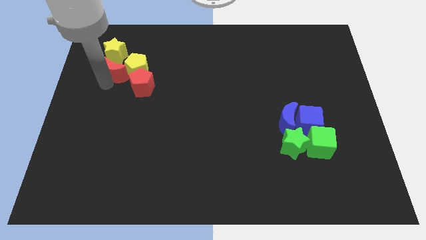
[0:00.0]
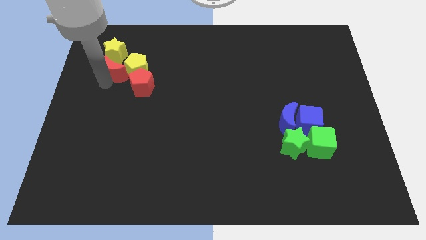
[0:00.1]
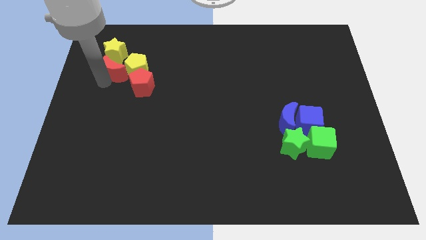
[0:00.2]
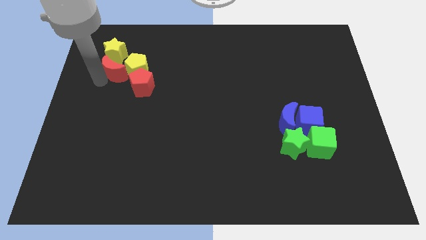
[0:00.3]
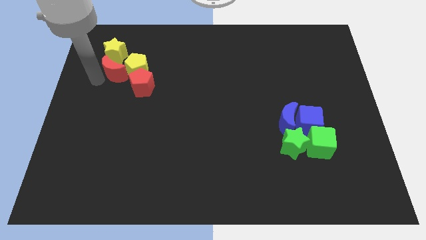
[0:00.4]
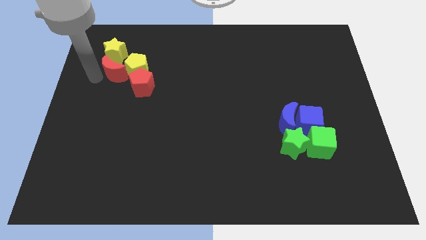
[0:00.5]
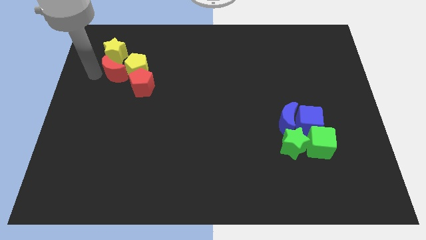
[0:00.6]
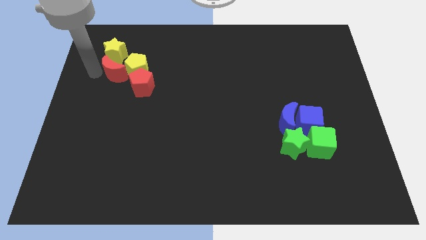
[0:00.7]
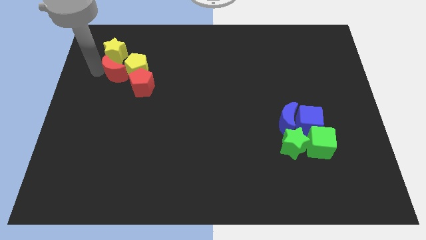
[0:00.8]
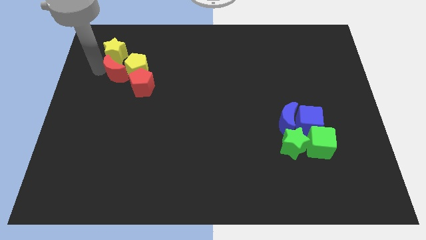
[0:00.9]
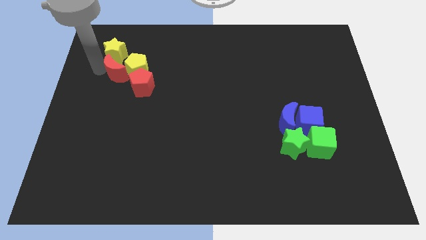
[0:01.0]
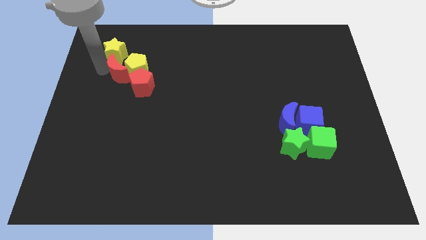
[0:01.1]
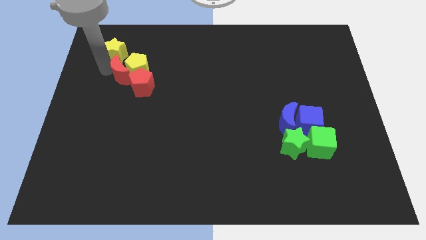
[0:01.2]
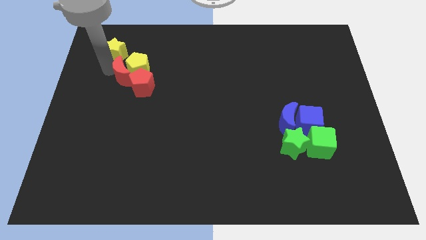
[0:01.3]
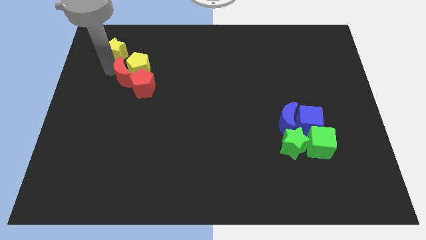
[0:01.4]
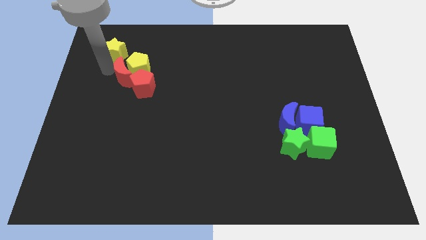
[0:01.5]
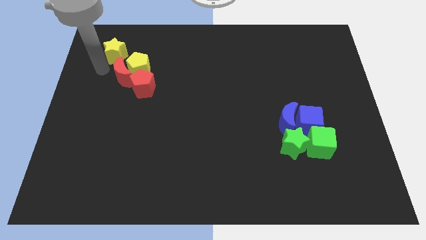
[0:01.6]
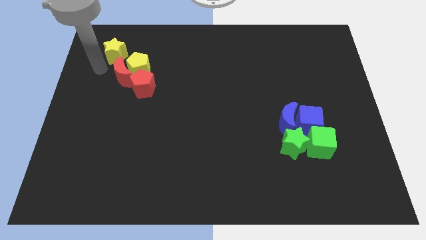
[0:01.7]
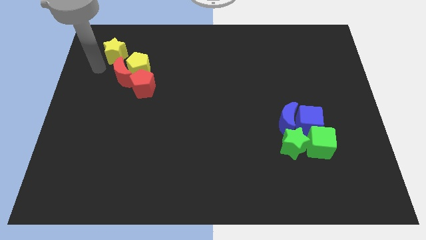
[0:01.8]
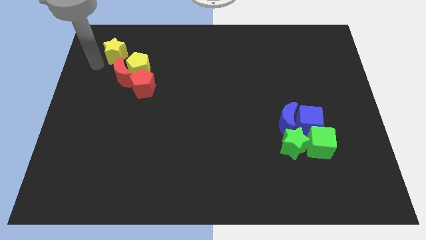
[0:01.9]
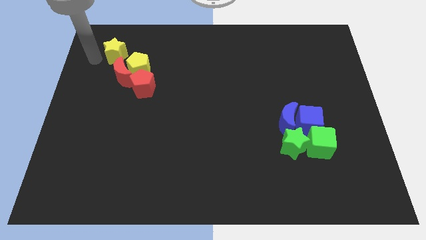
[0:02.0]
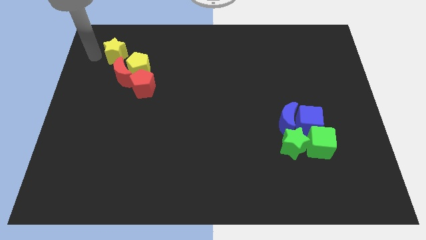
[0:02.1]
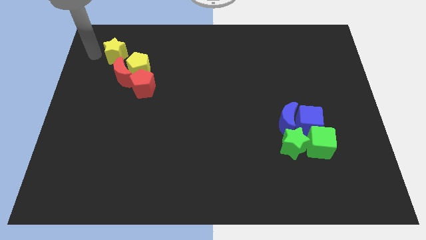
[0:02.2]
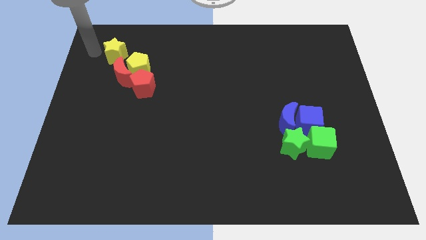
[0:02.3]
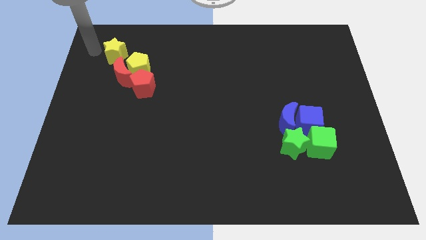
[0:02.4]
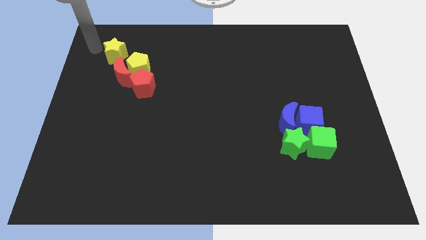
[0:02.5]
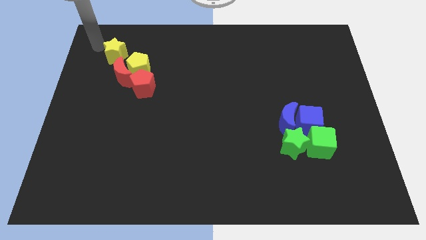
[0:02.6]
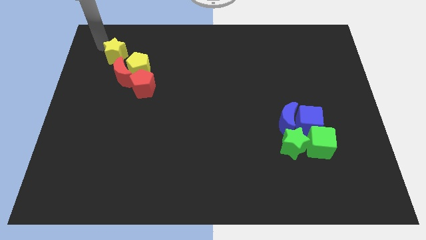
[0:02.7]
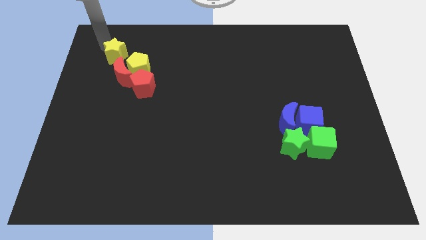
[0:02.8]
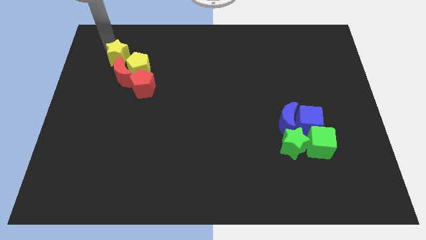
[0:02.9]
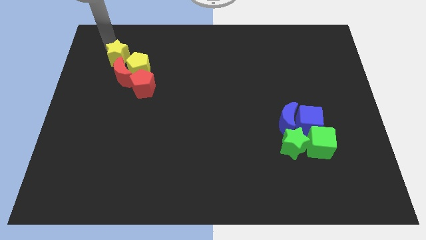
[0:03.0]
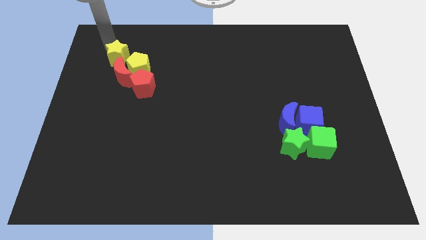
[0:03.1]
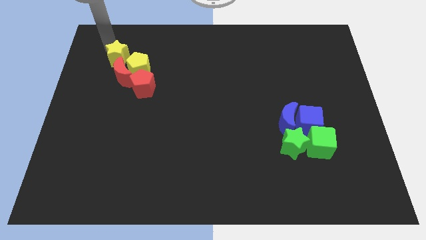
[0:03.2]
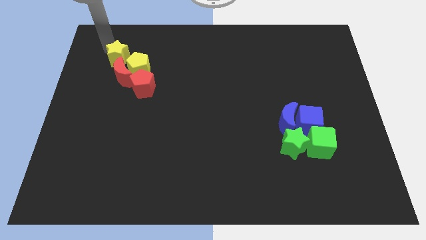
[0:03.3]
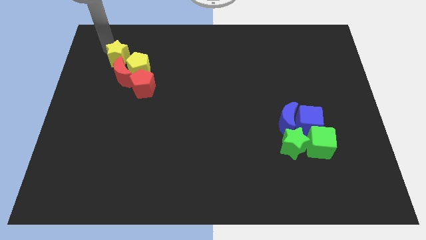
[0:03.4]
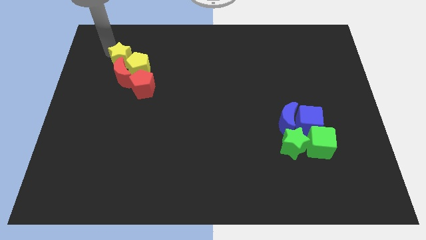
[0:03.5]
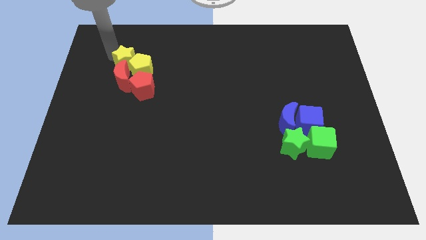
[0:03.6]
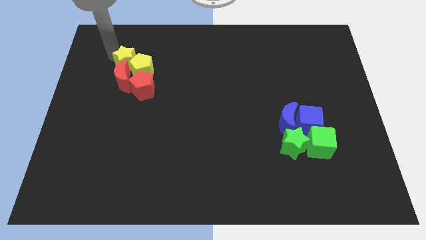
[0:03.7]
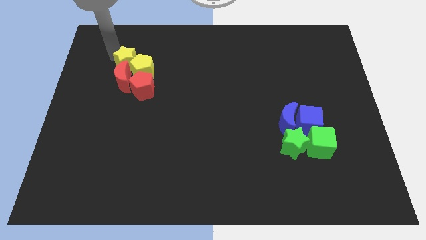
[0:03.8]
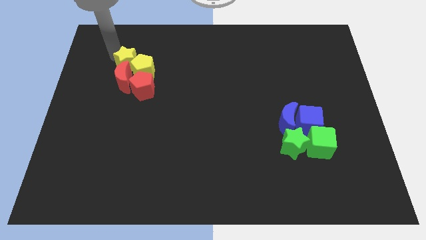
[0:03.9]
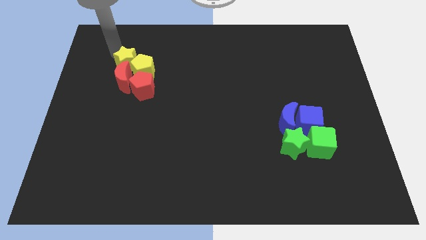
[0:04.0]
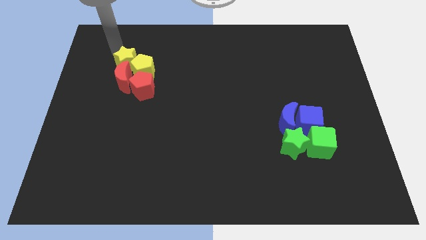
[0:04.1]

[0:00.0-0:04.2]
push the yellow star into the yellow pentagon

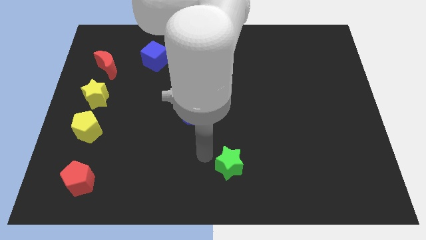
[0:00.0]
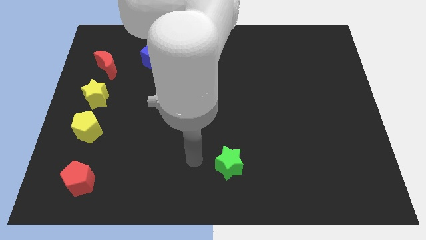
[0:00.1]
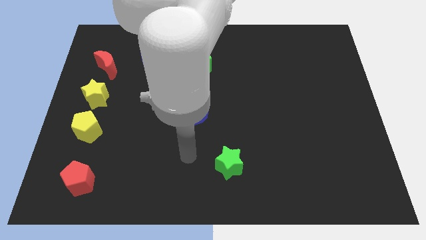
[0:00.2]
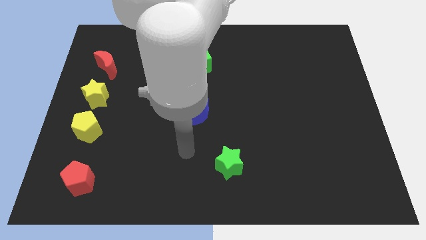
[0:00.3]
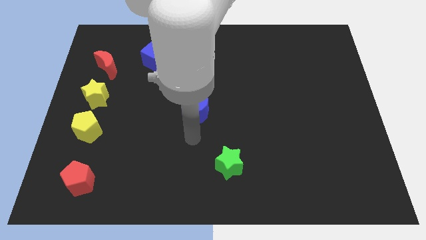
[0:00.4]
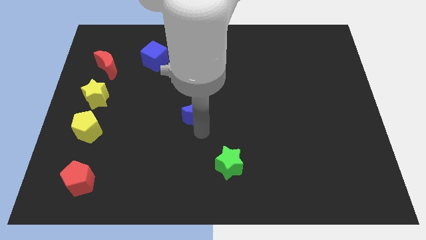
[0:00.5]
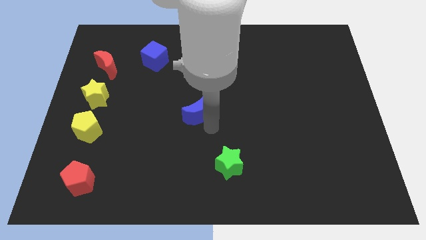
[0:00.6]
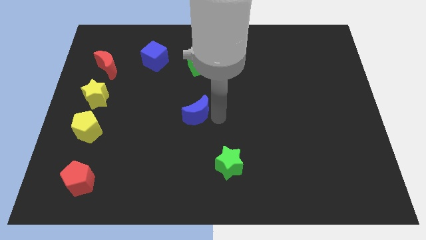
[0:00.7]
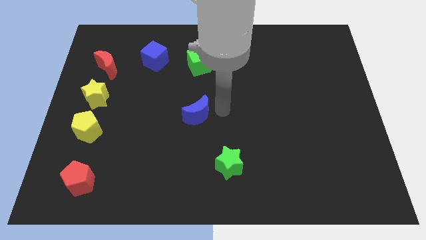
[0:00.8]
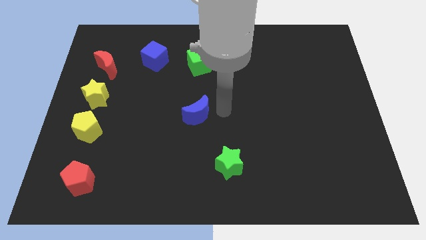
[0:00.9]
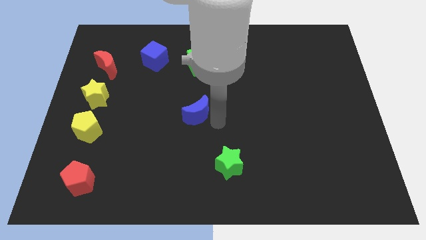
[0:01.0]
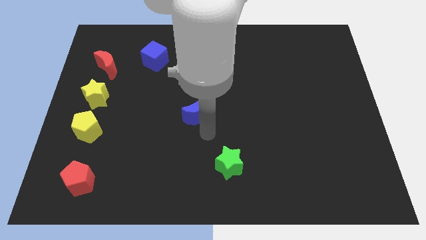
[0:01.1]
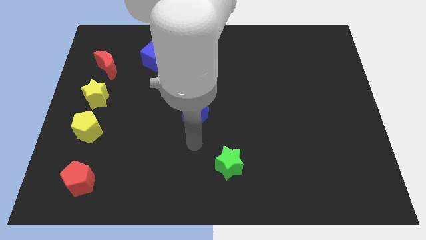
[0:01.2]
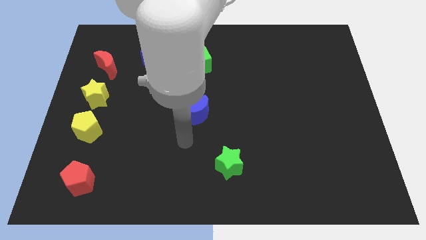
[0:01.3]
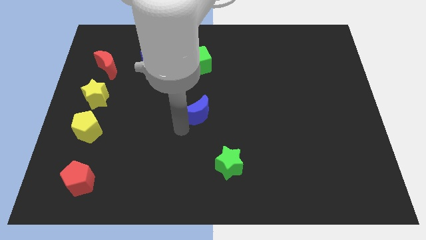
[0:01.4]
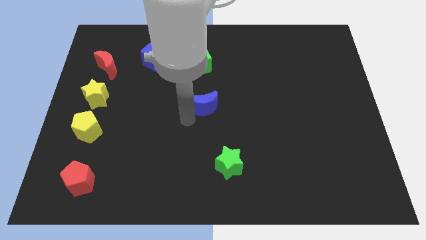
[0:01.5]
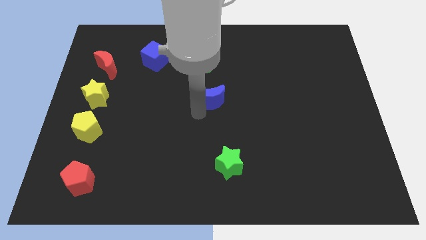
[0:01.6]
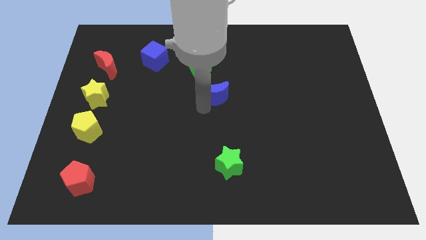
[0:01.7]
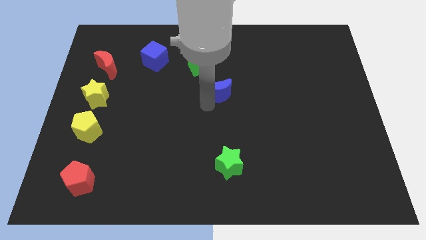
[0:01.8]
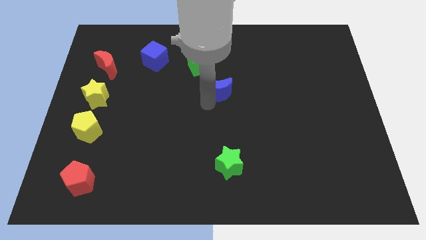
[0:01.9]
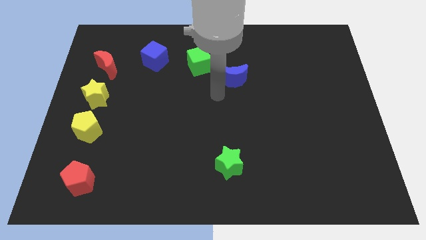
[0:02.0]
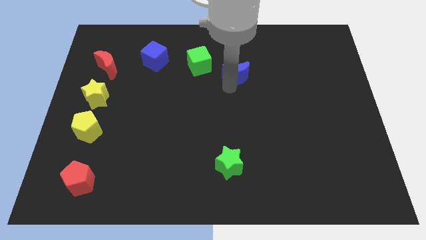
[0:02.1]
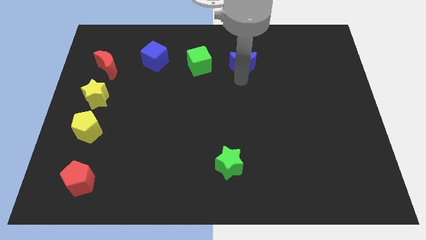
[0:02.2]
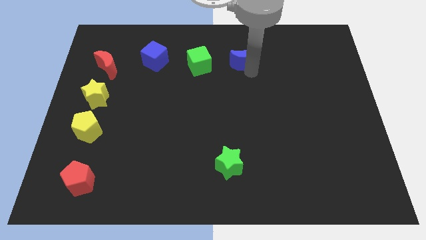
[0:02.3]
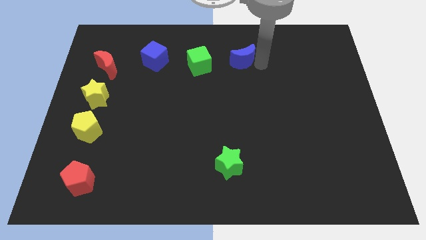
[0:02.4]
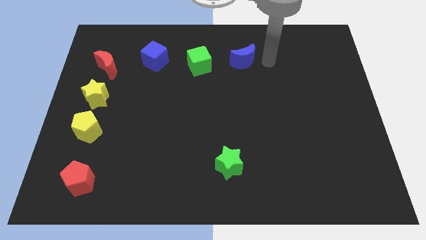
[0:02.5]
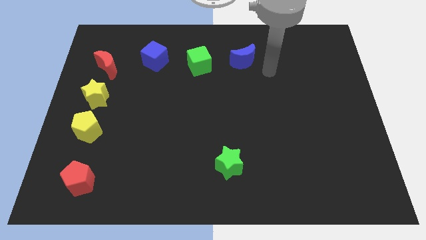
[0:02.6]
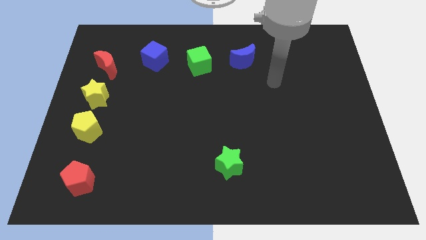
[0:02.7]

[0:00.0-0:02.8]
slide the blue moon to the right of the green cube

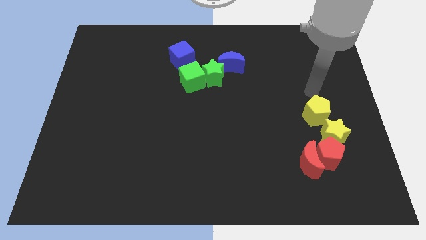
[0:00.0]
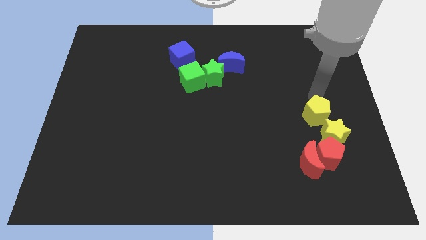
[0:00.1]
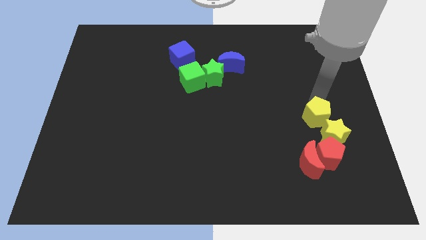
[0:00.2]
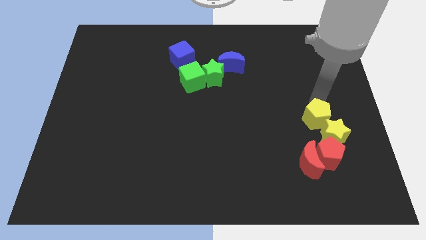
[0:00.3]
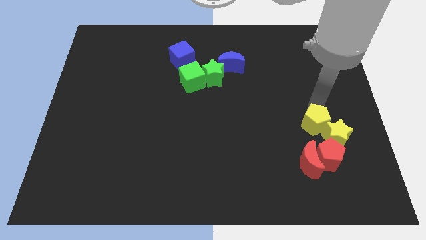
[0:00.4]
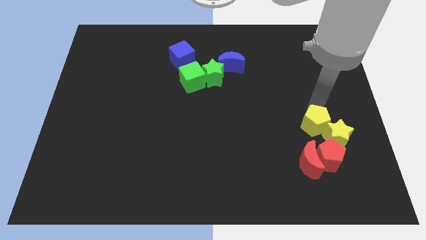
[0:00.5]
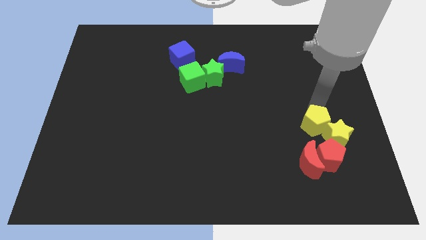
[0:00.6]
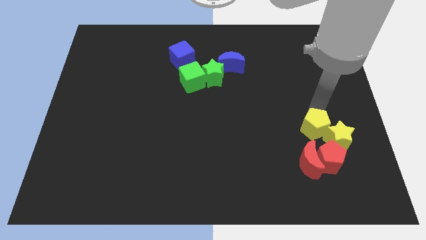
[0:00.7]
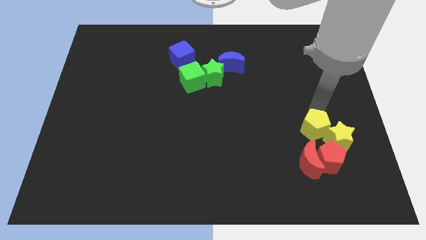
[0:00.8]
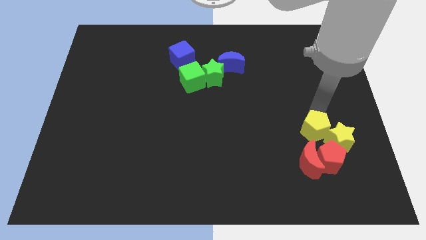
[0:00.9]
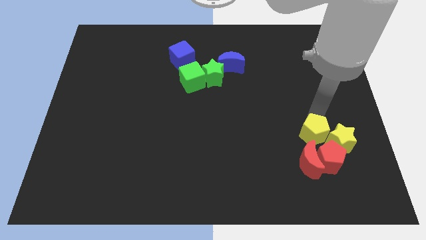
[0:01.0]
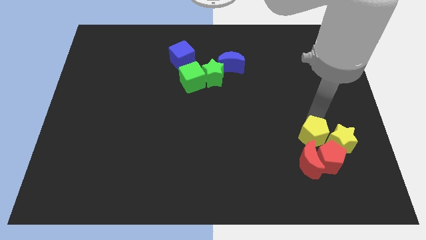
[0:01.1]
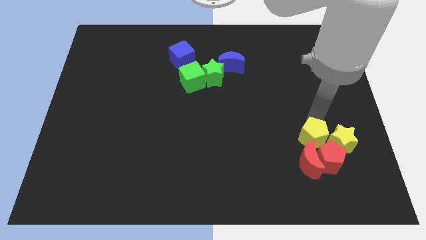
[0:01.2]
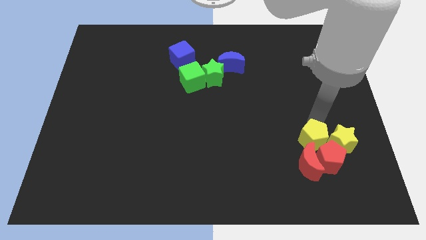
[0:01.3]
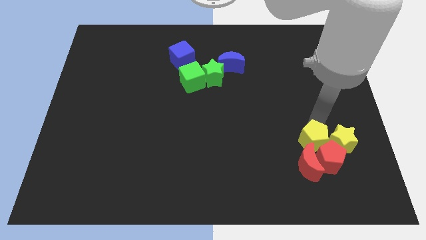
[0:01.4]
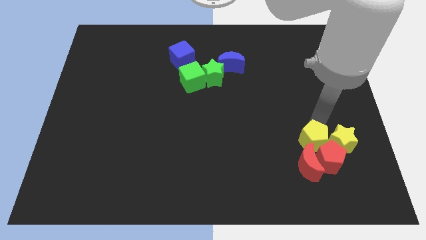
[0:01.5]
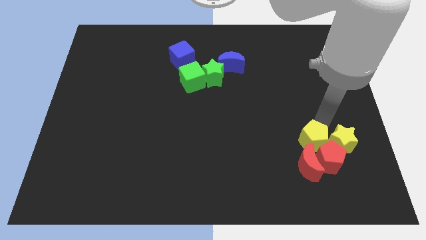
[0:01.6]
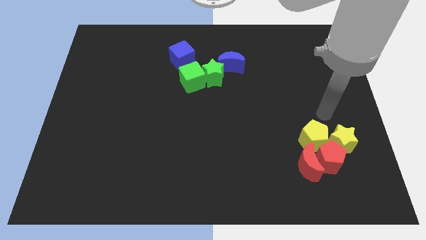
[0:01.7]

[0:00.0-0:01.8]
move the yellow pentagon into the top side of the red crescent and red pentagon

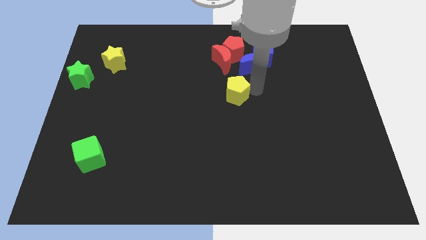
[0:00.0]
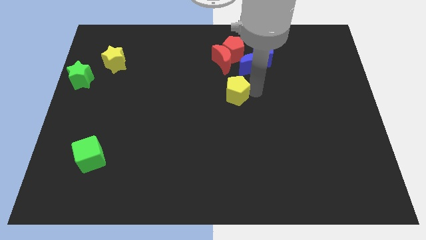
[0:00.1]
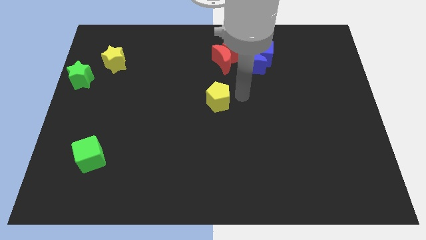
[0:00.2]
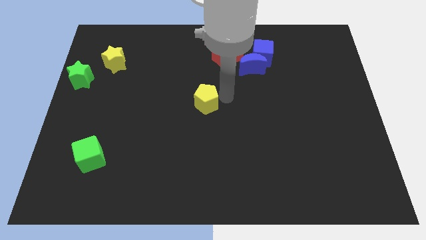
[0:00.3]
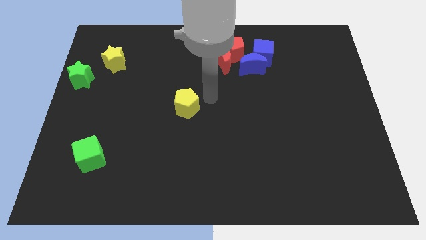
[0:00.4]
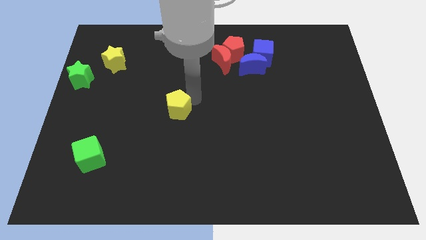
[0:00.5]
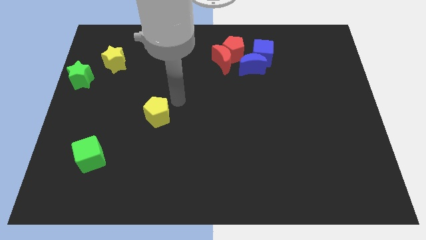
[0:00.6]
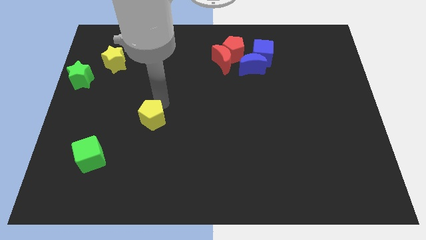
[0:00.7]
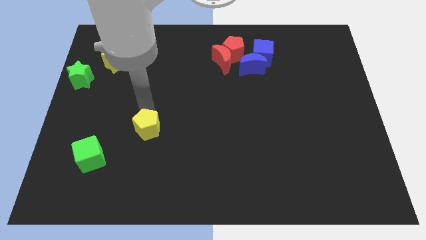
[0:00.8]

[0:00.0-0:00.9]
move the yellow pentagon slightly towards the bottom left of the board
